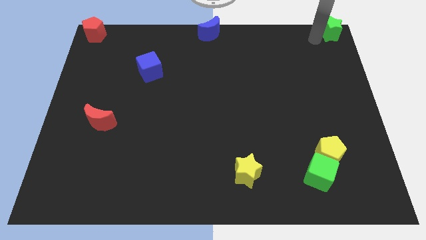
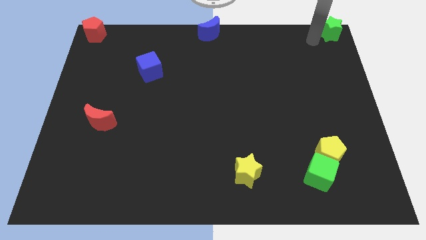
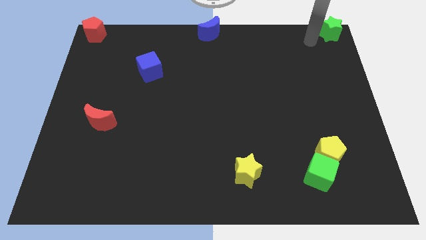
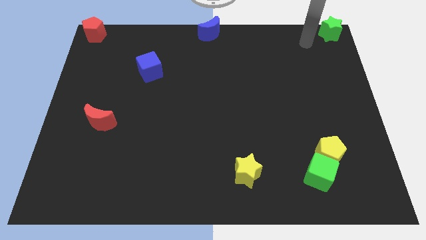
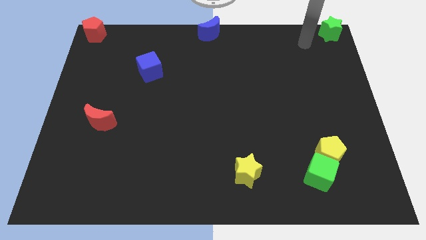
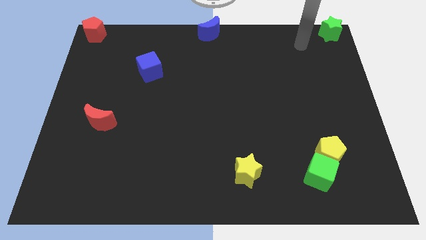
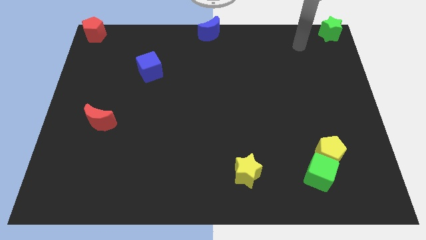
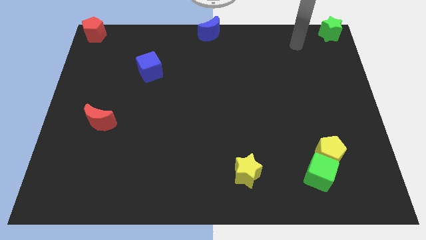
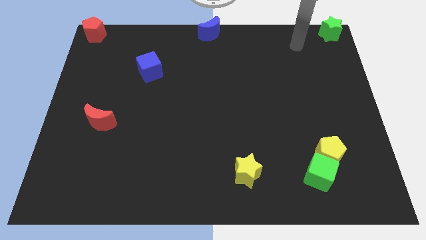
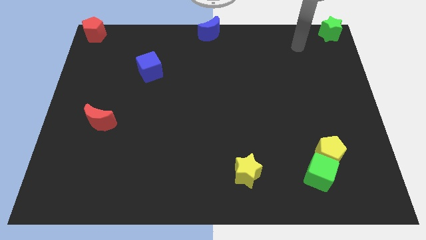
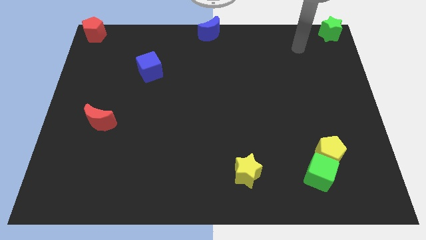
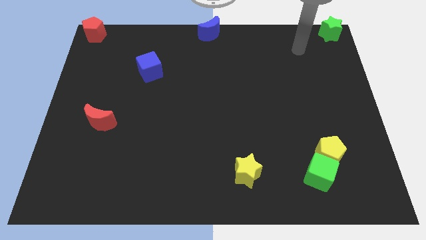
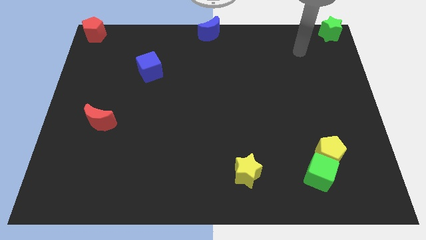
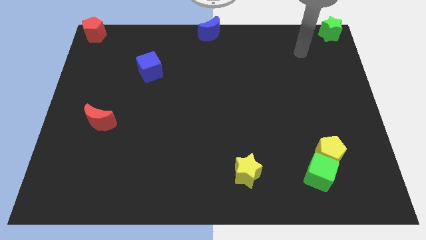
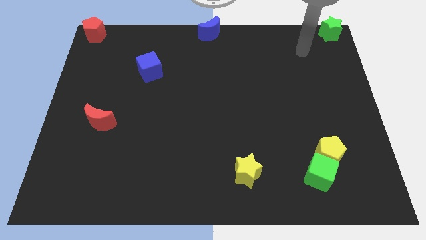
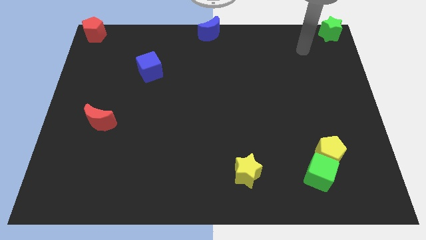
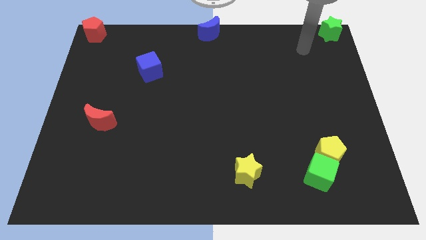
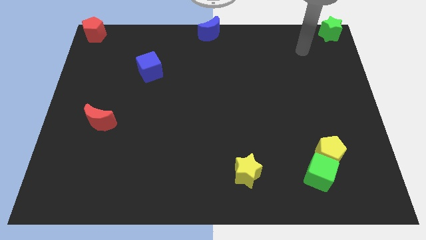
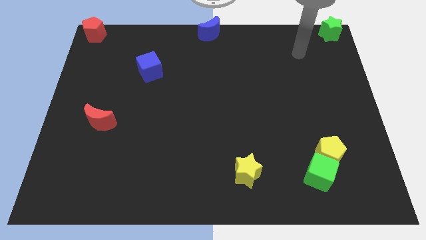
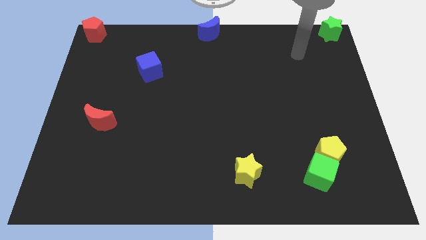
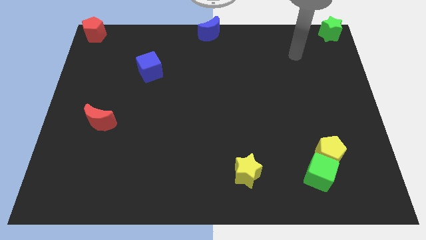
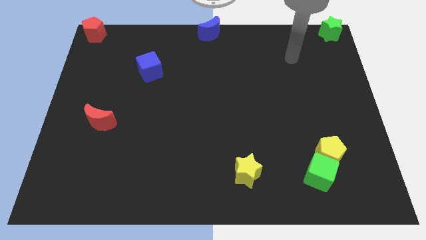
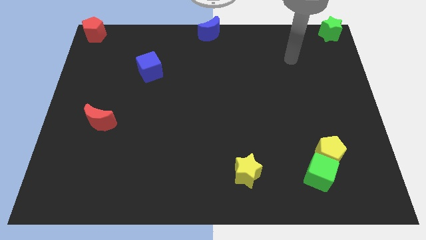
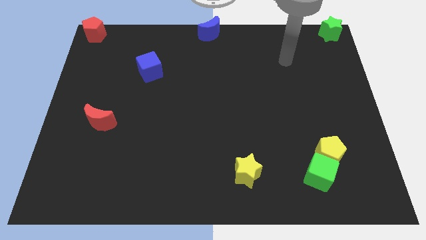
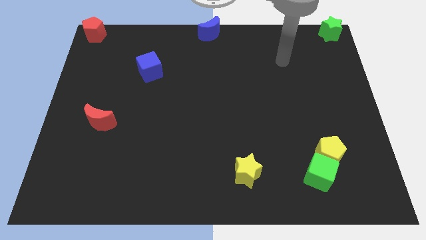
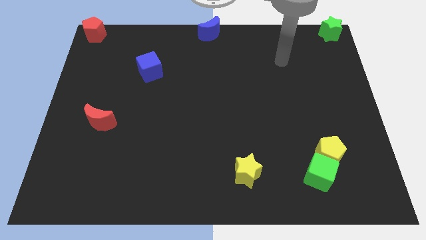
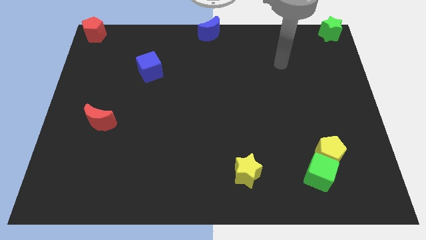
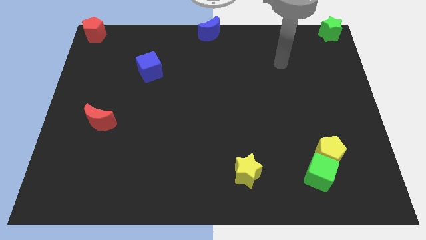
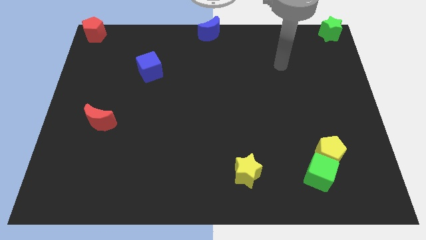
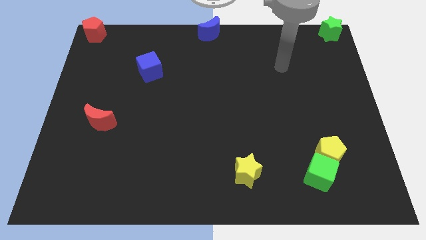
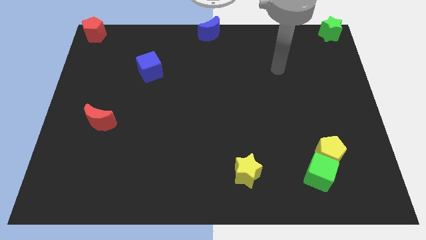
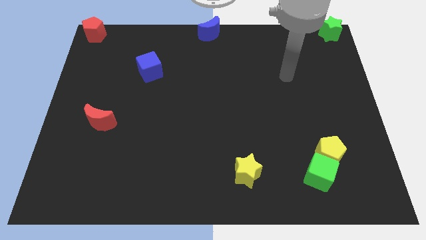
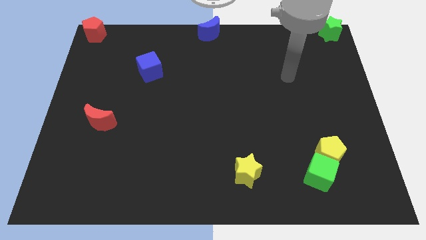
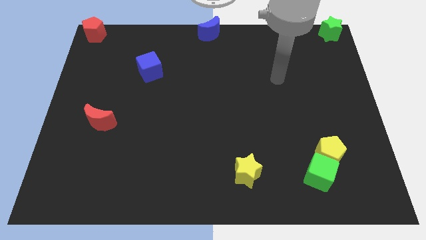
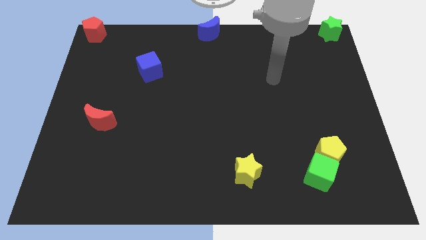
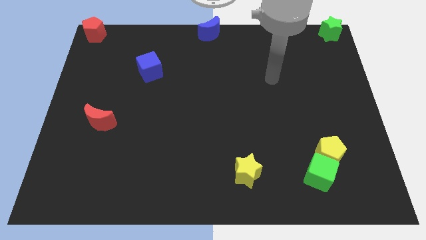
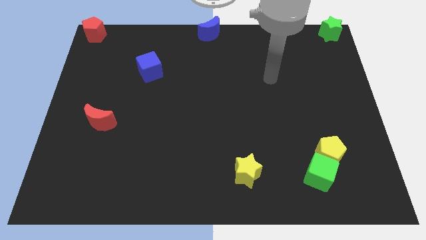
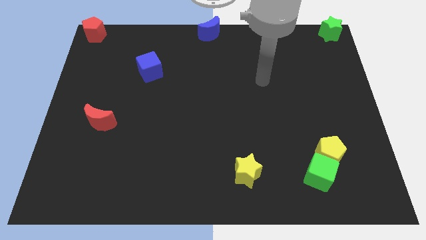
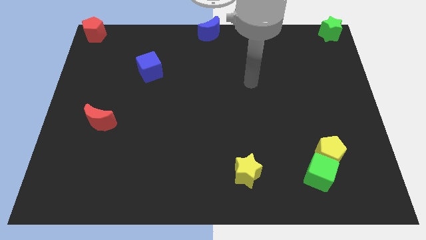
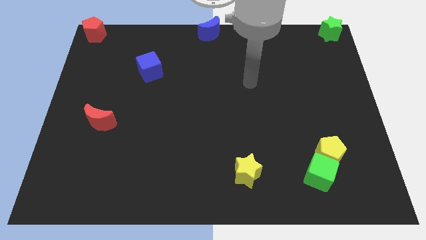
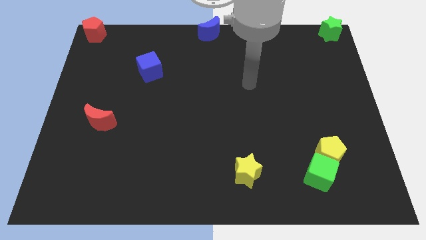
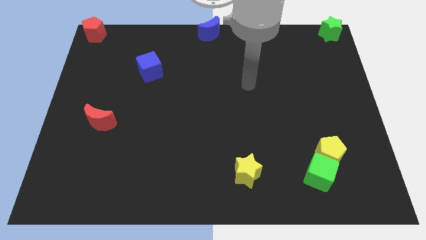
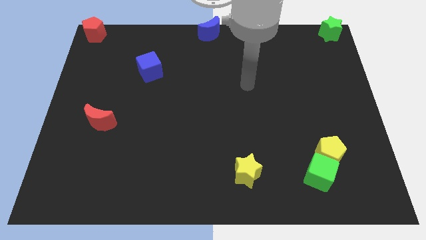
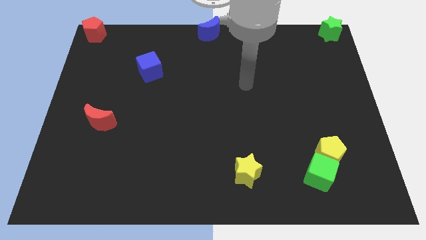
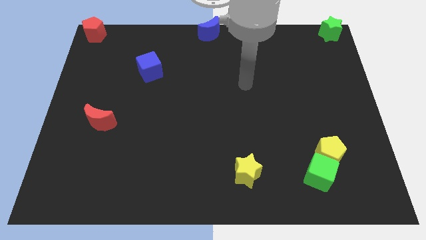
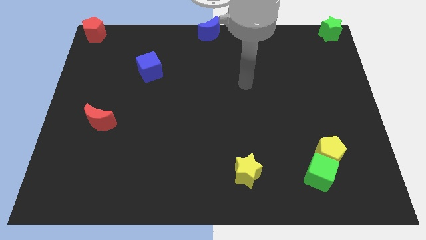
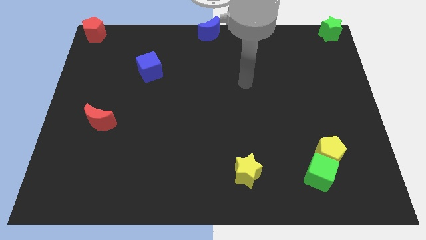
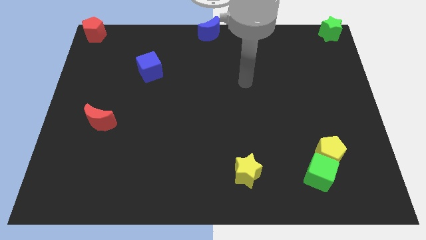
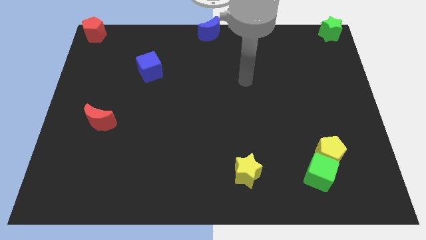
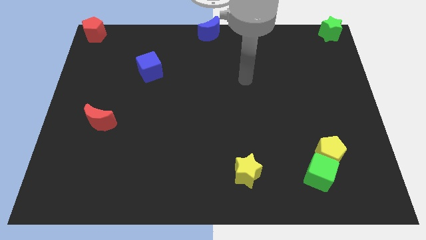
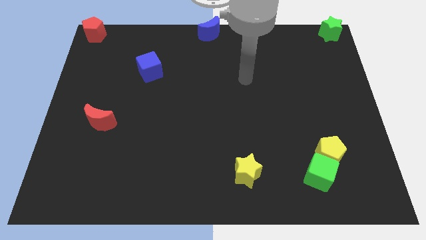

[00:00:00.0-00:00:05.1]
move your arm away from green star

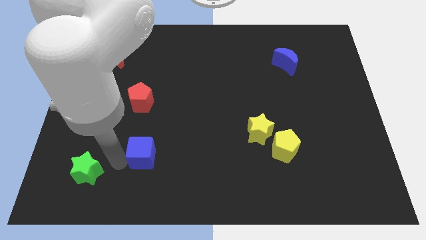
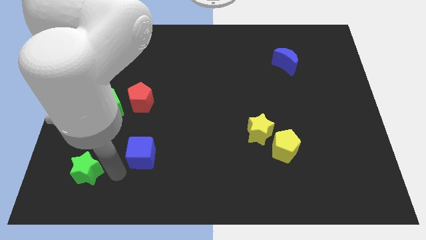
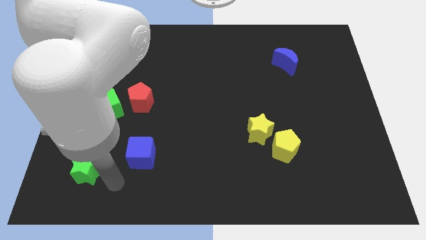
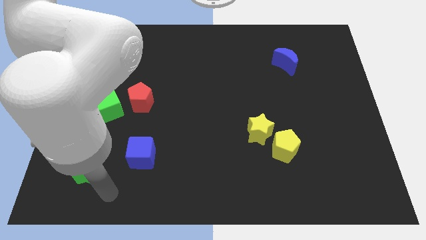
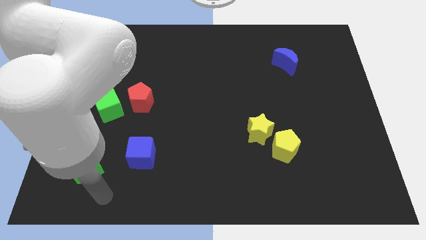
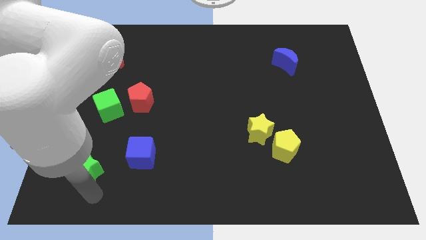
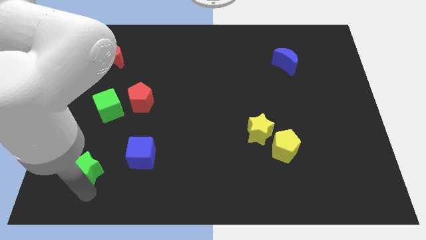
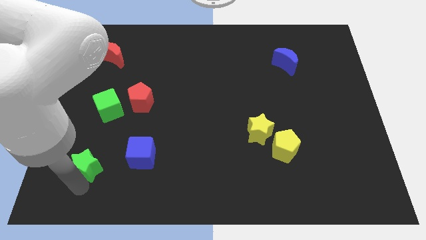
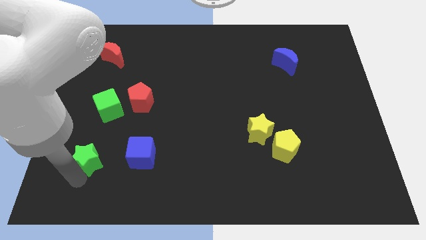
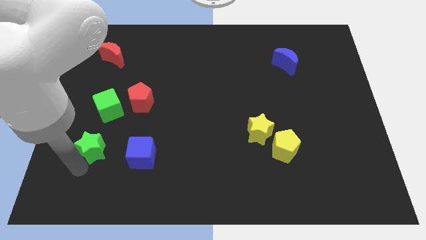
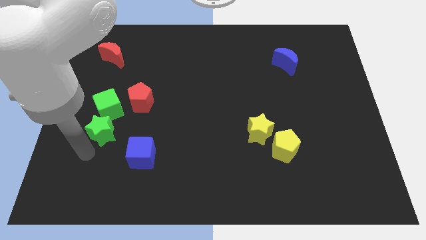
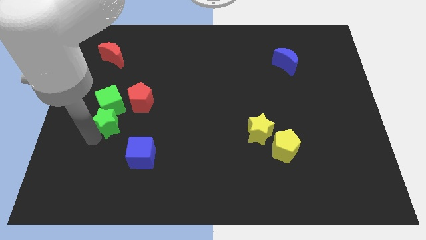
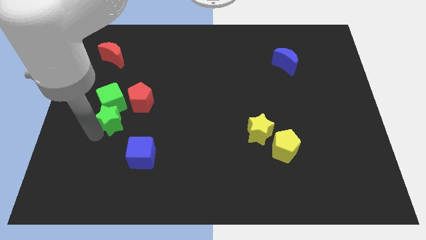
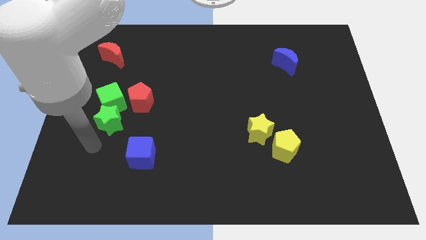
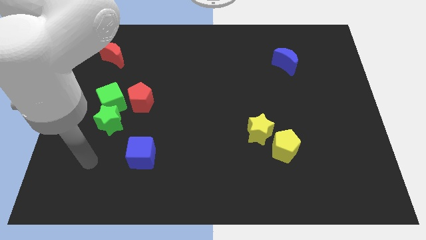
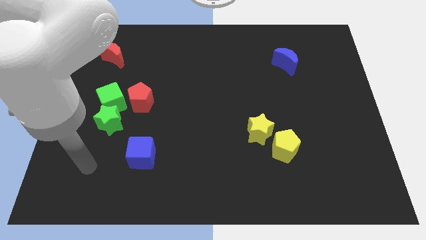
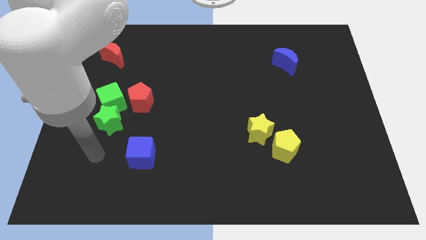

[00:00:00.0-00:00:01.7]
move the green star into the green cube

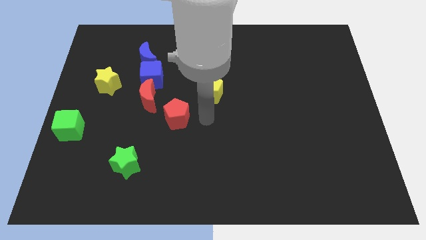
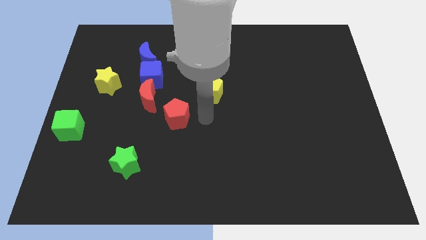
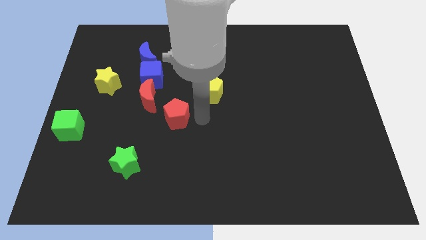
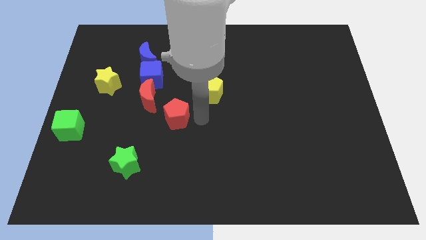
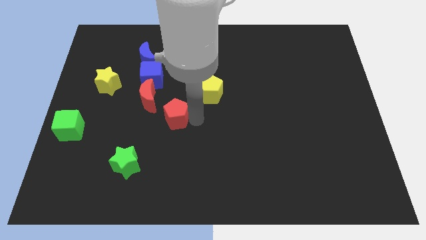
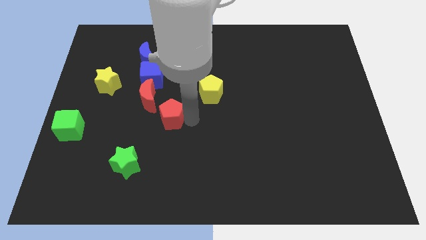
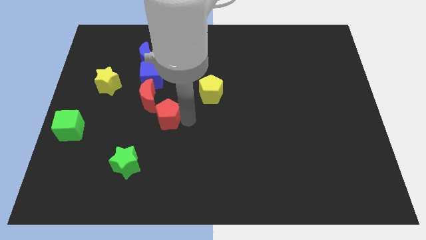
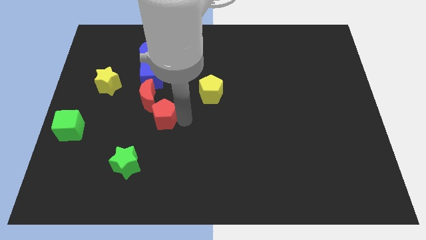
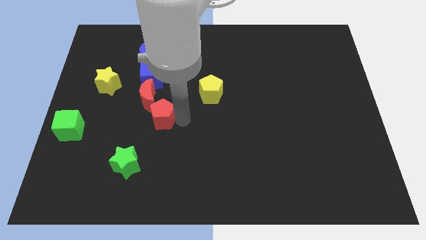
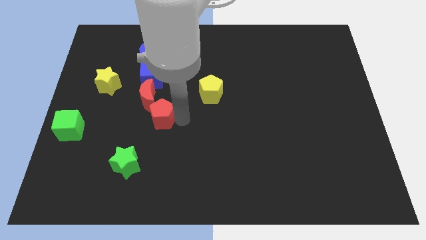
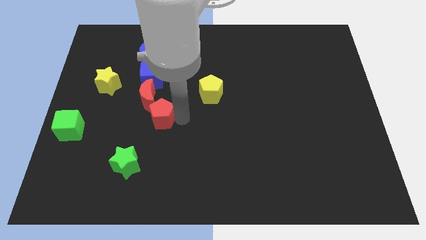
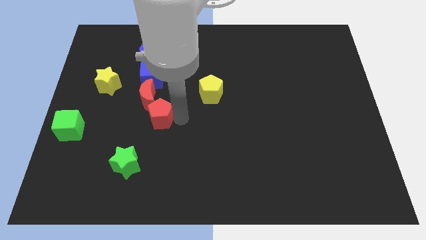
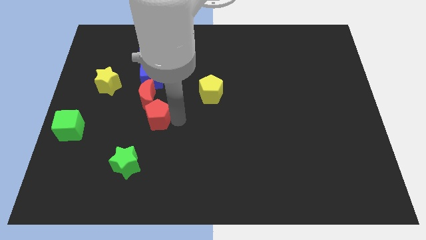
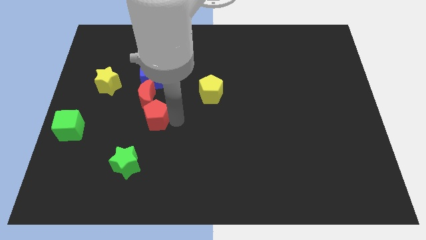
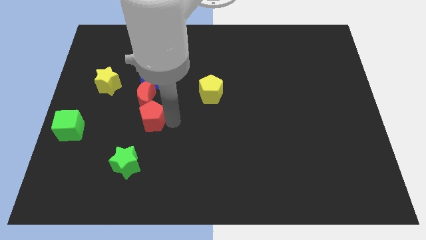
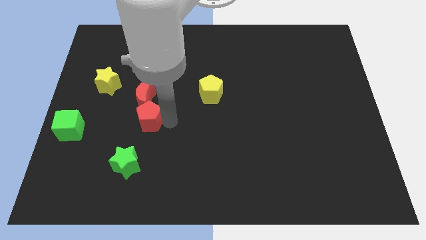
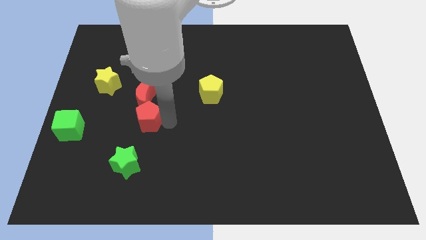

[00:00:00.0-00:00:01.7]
slide the red pentagon slightly to the left

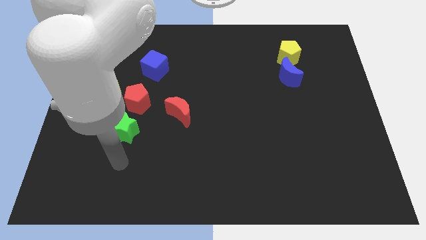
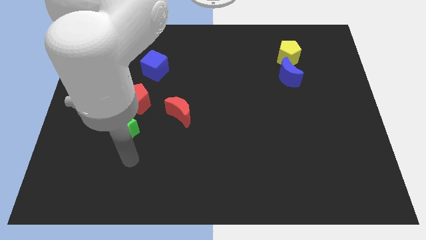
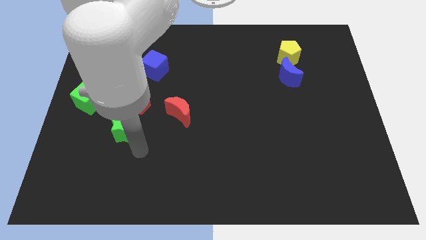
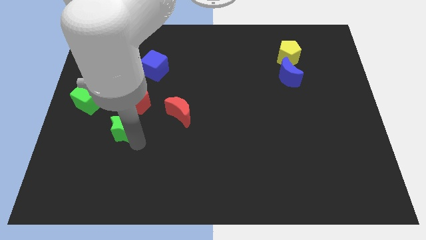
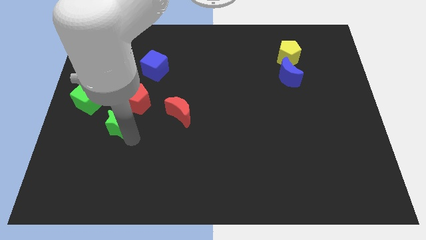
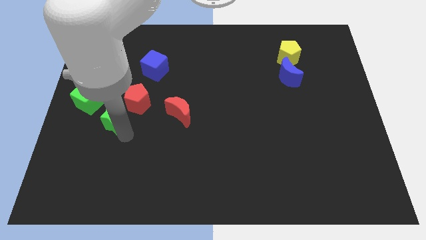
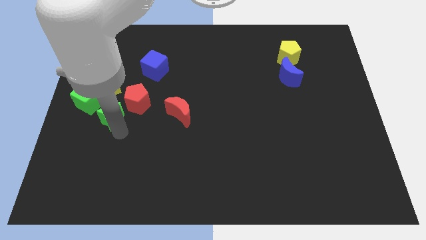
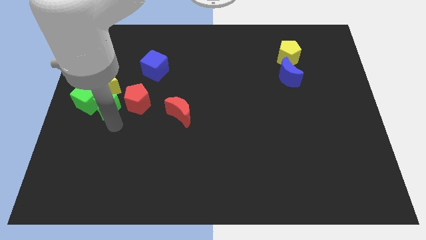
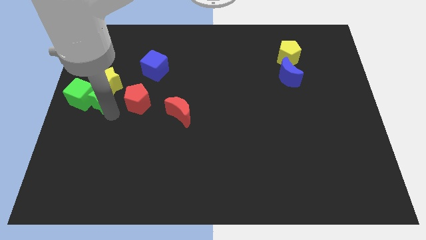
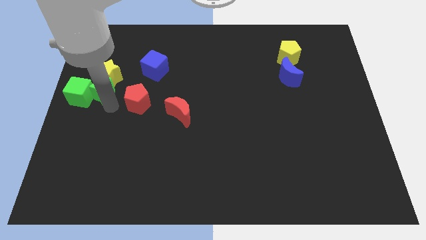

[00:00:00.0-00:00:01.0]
push the green star in between red pentagon and green cube
